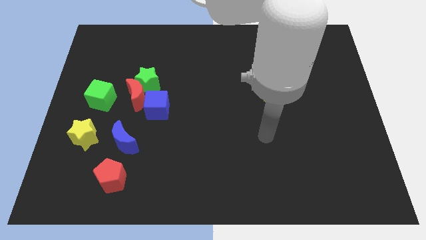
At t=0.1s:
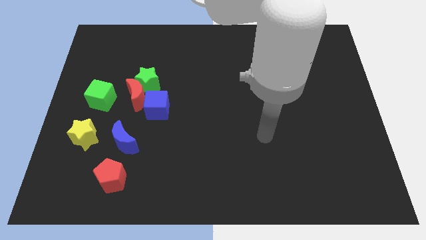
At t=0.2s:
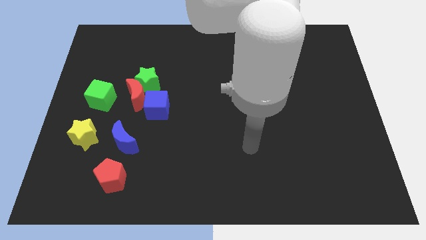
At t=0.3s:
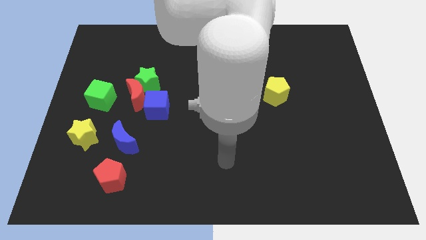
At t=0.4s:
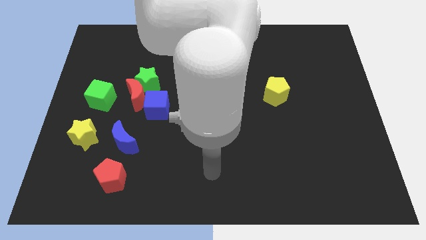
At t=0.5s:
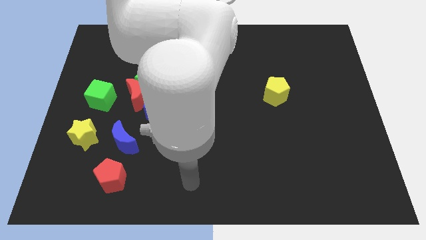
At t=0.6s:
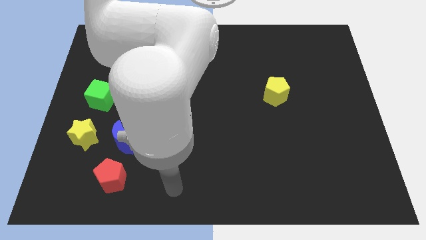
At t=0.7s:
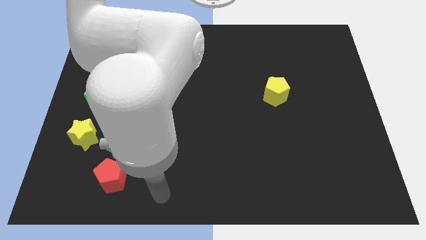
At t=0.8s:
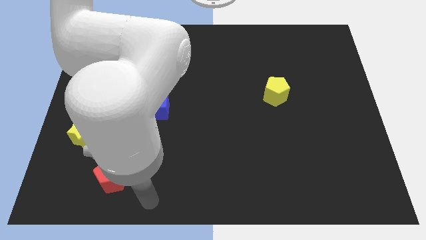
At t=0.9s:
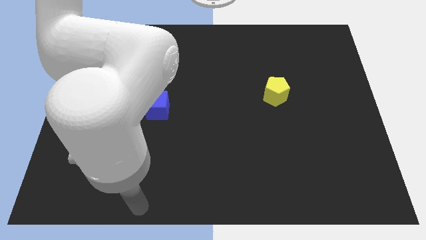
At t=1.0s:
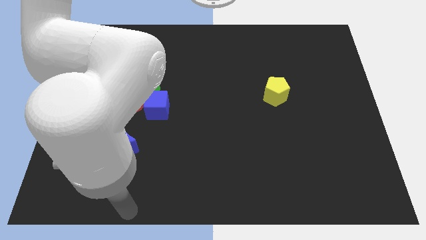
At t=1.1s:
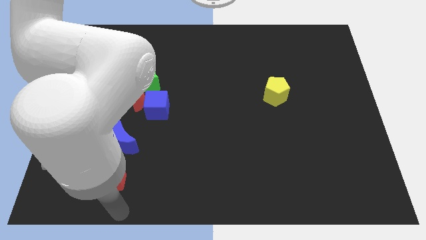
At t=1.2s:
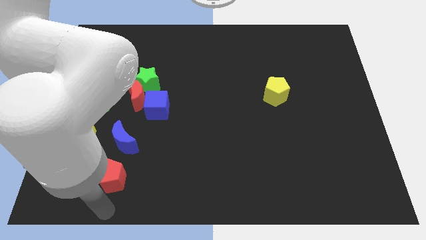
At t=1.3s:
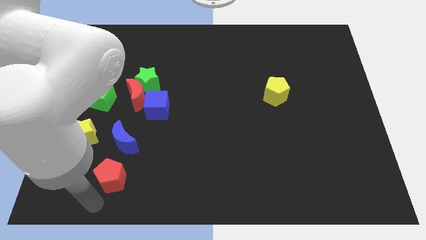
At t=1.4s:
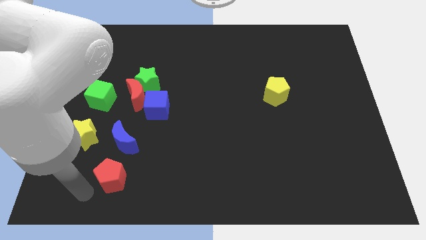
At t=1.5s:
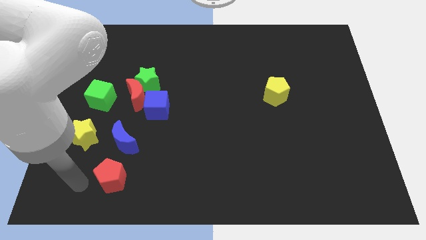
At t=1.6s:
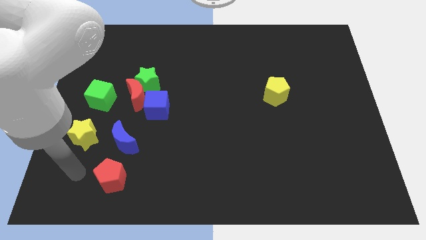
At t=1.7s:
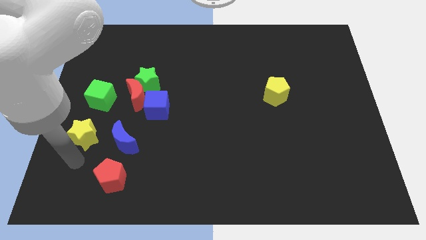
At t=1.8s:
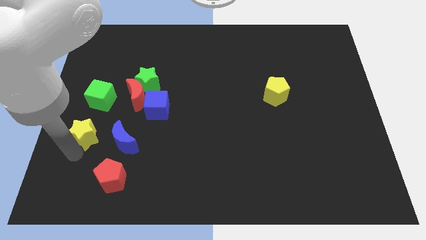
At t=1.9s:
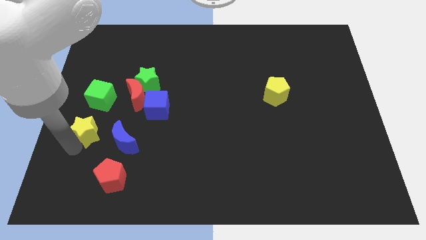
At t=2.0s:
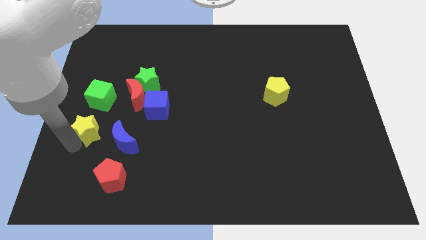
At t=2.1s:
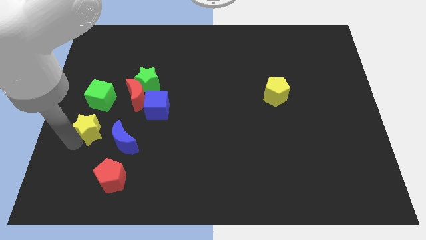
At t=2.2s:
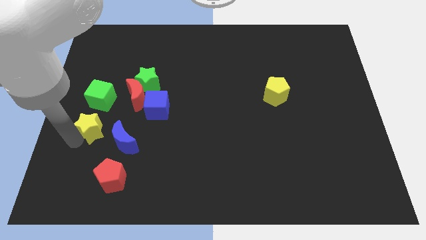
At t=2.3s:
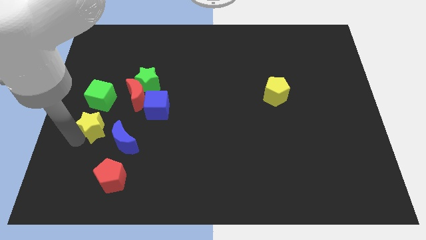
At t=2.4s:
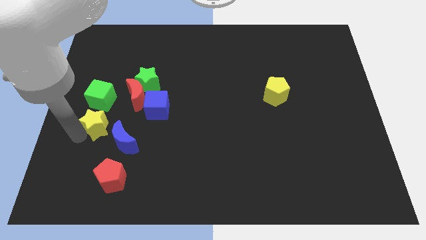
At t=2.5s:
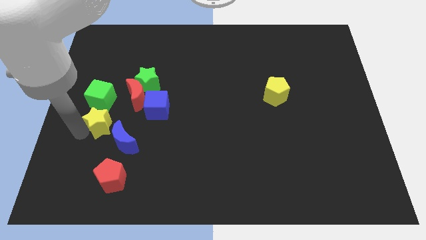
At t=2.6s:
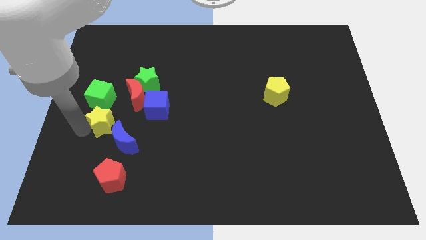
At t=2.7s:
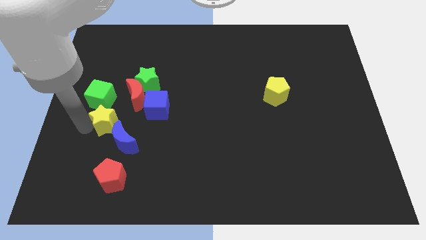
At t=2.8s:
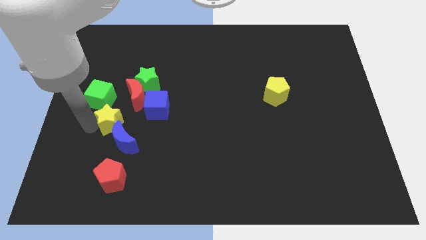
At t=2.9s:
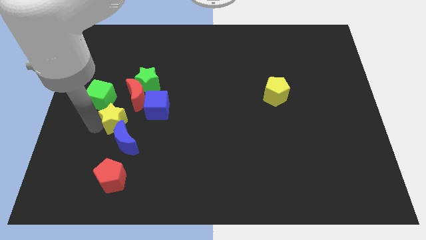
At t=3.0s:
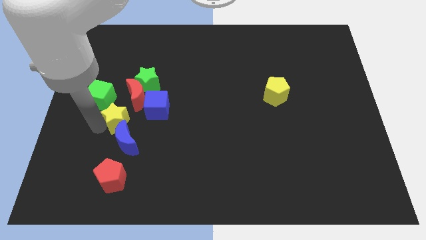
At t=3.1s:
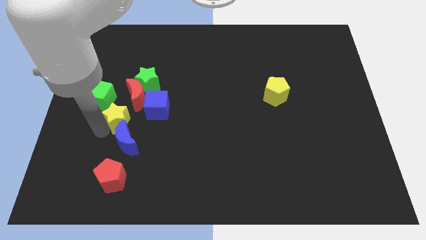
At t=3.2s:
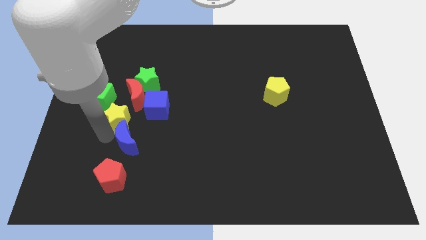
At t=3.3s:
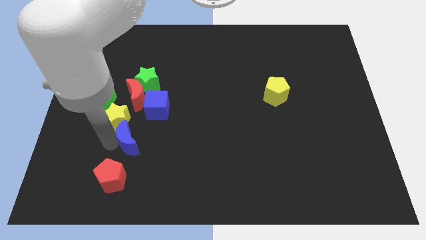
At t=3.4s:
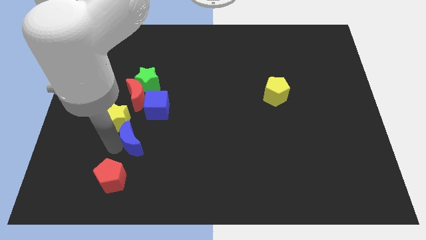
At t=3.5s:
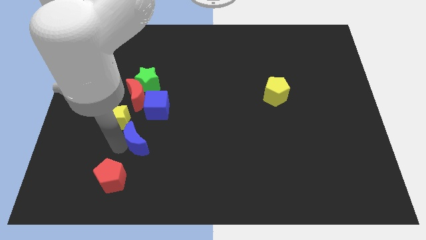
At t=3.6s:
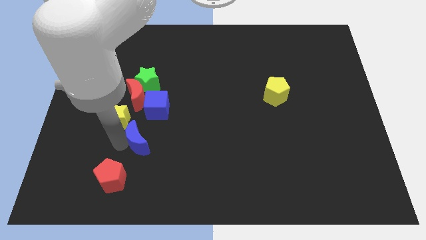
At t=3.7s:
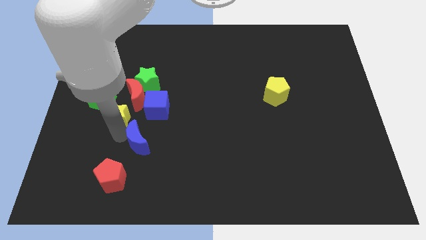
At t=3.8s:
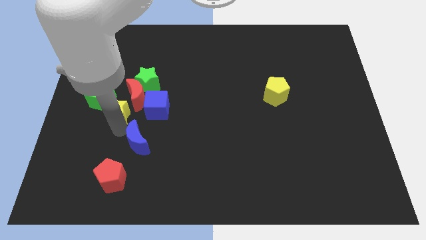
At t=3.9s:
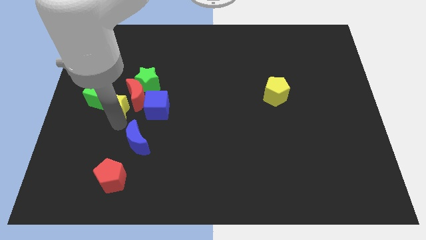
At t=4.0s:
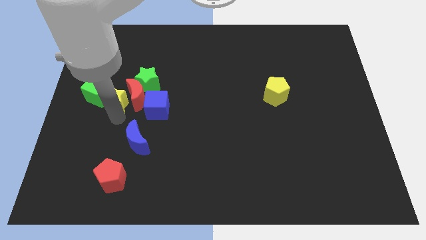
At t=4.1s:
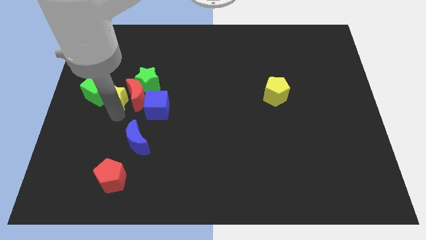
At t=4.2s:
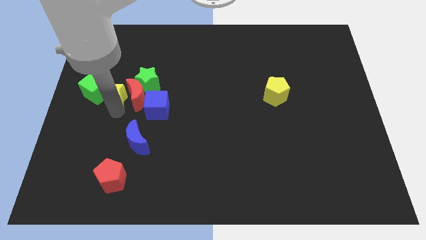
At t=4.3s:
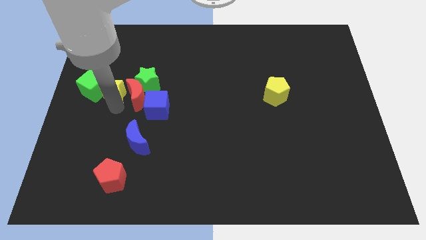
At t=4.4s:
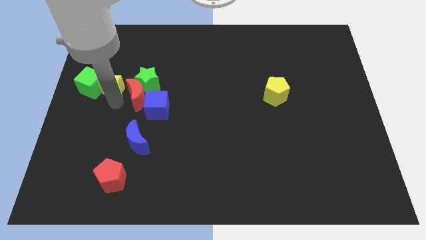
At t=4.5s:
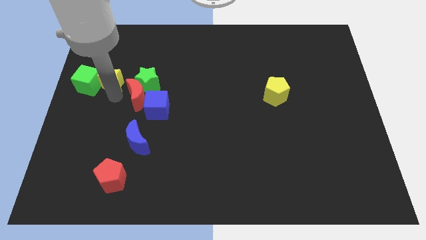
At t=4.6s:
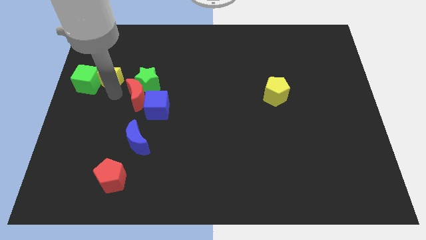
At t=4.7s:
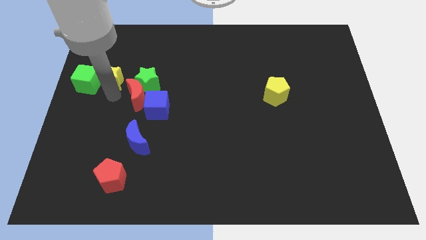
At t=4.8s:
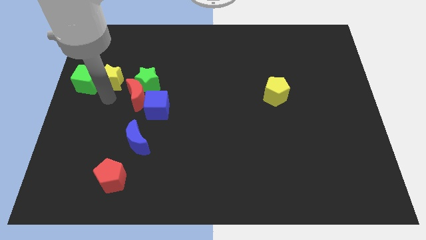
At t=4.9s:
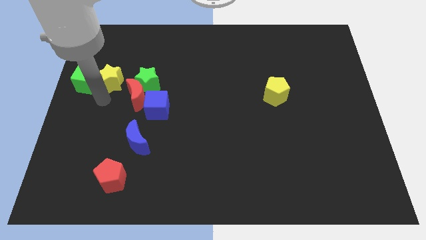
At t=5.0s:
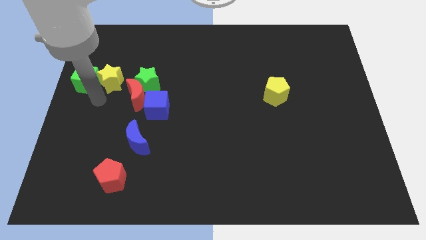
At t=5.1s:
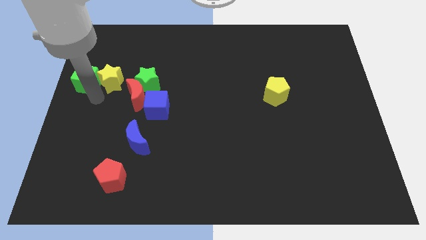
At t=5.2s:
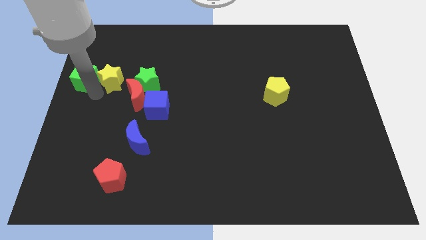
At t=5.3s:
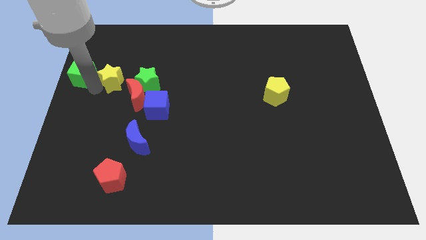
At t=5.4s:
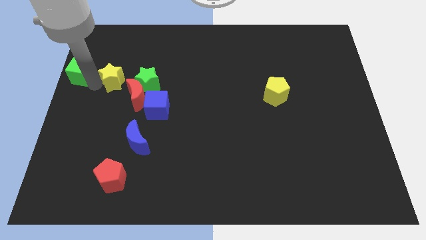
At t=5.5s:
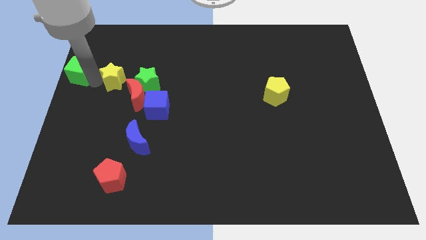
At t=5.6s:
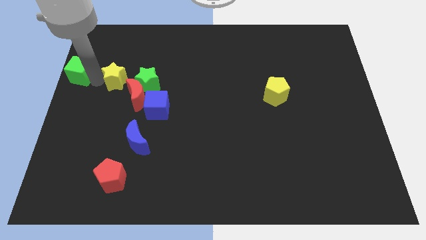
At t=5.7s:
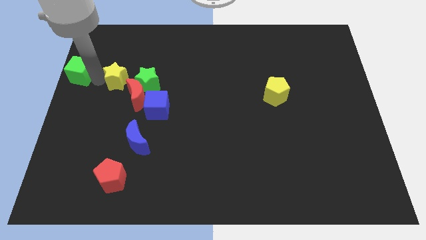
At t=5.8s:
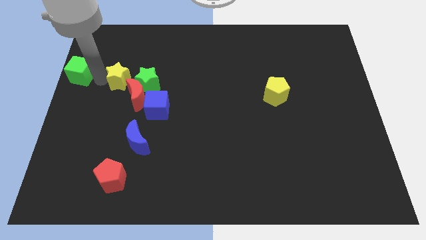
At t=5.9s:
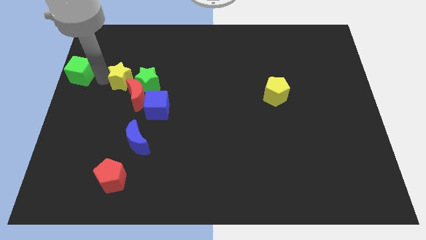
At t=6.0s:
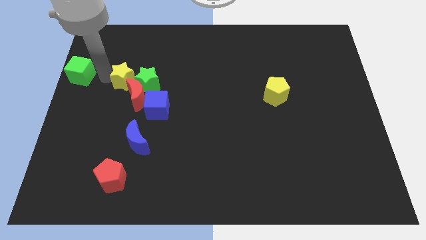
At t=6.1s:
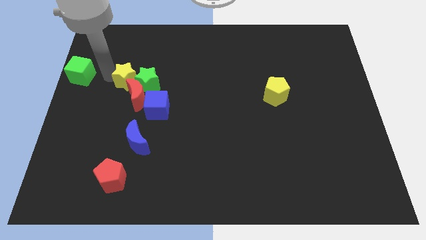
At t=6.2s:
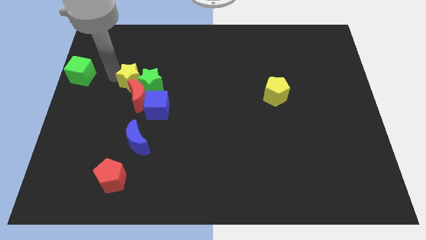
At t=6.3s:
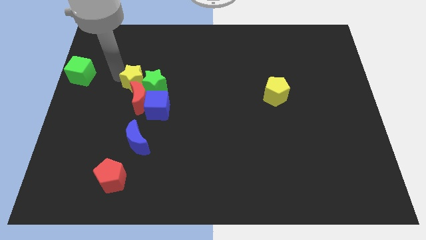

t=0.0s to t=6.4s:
move the yellow star next to the green star

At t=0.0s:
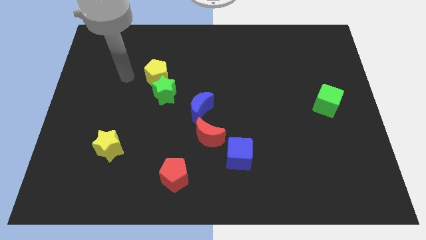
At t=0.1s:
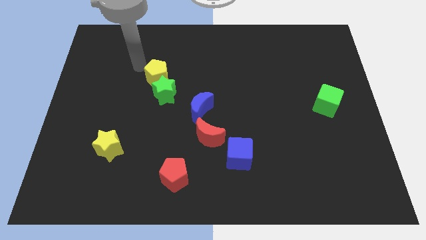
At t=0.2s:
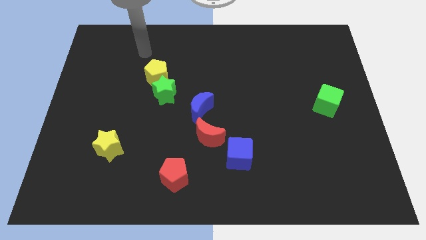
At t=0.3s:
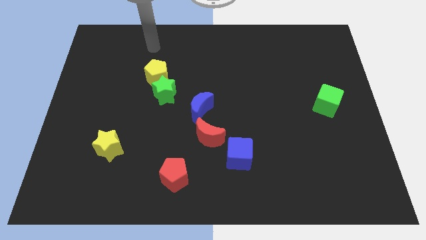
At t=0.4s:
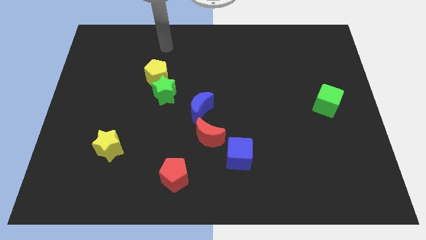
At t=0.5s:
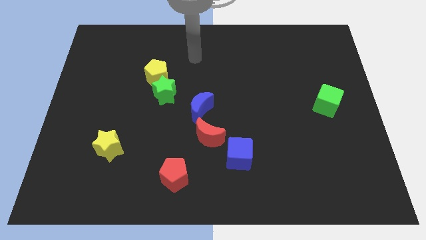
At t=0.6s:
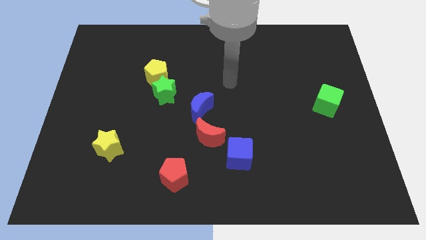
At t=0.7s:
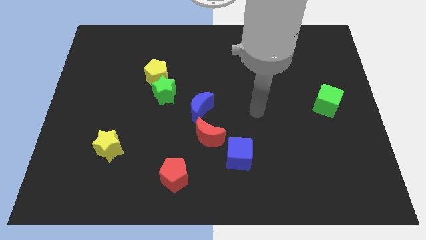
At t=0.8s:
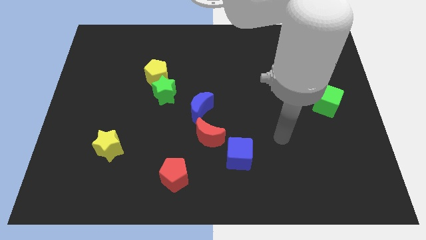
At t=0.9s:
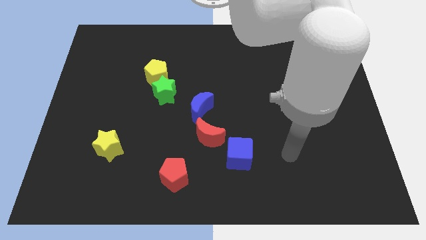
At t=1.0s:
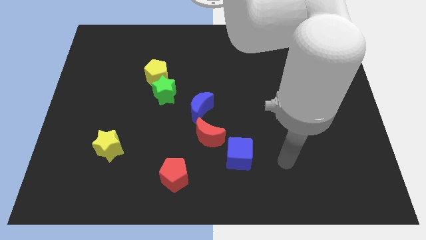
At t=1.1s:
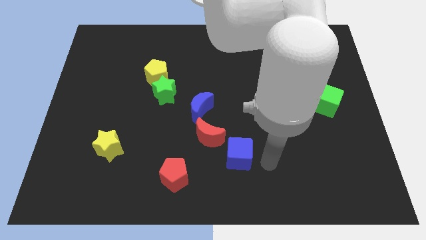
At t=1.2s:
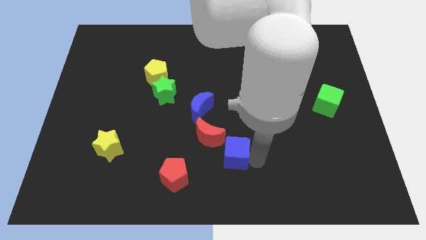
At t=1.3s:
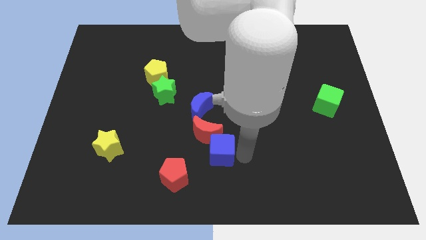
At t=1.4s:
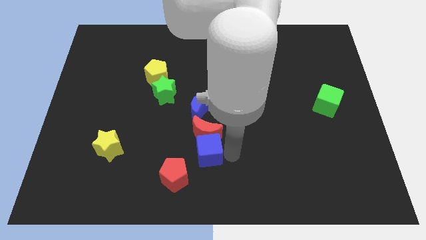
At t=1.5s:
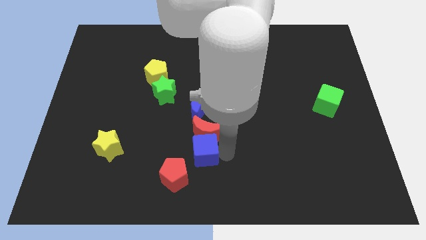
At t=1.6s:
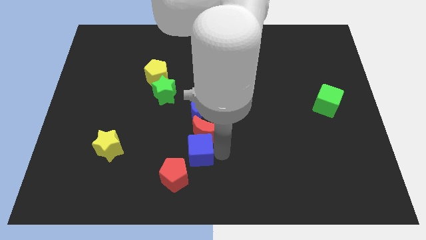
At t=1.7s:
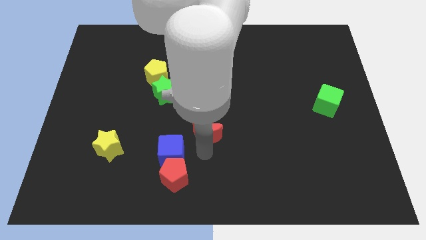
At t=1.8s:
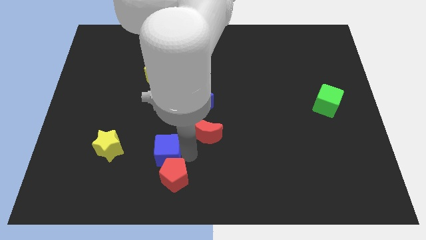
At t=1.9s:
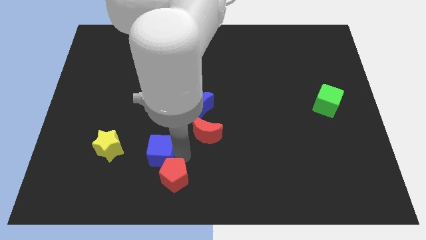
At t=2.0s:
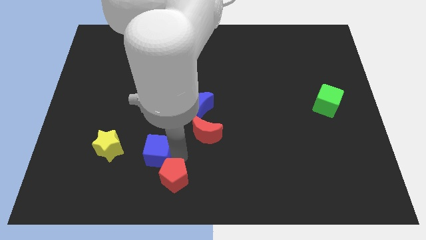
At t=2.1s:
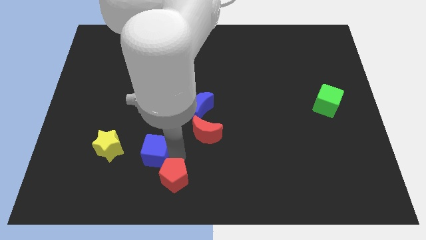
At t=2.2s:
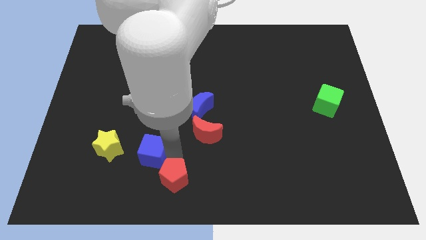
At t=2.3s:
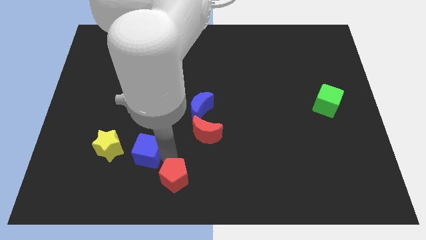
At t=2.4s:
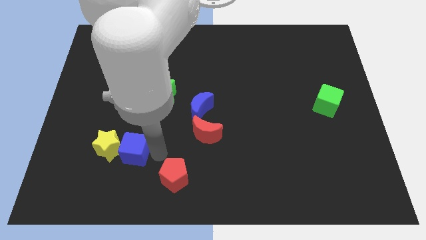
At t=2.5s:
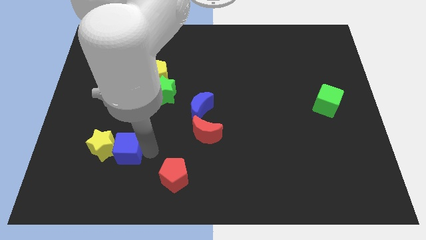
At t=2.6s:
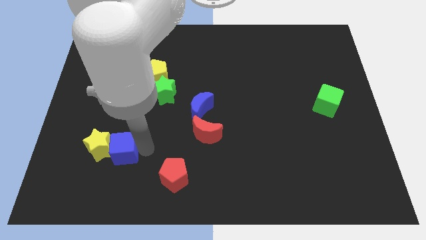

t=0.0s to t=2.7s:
put the blue cube close to the yellow star
